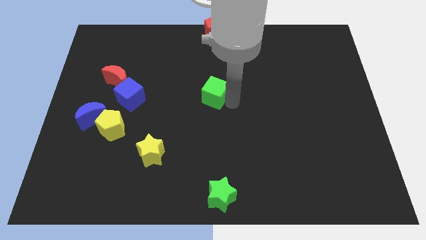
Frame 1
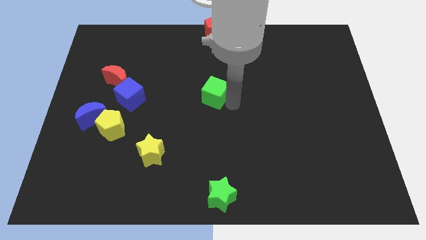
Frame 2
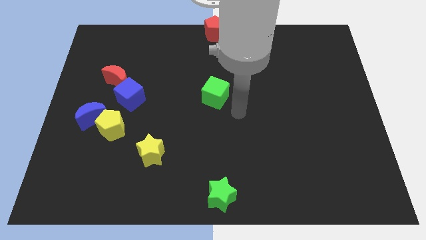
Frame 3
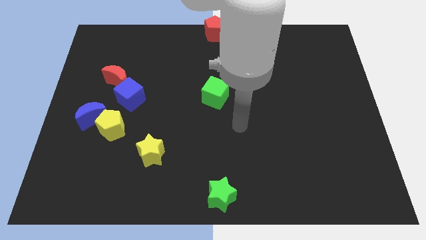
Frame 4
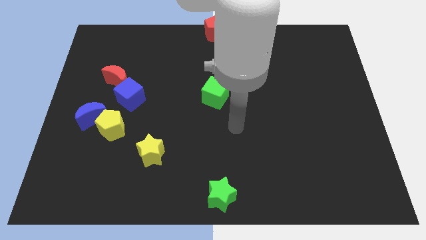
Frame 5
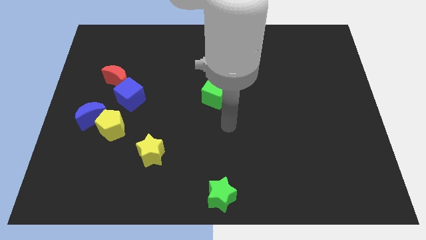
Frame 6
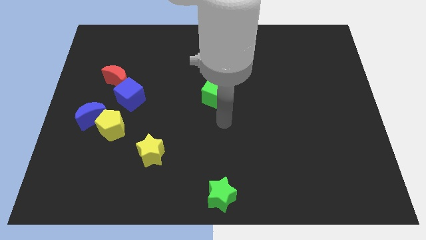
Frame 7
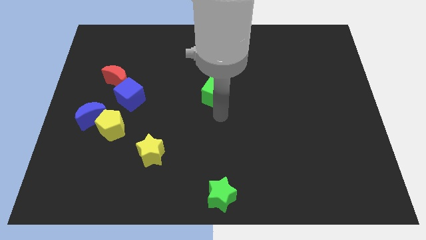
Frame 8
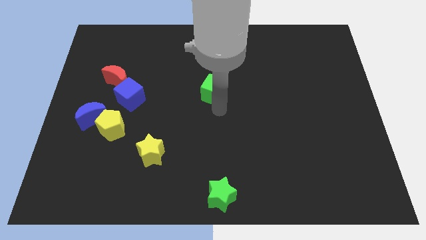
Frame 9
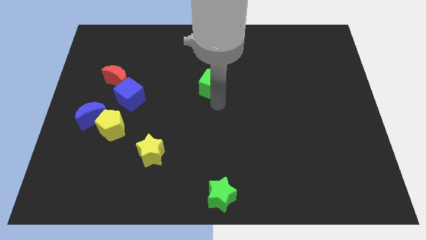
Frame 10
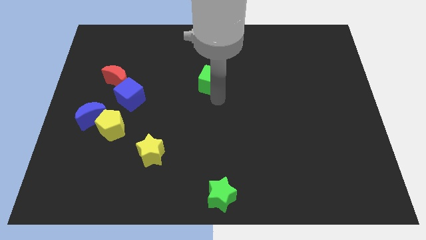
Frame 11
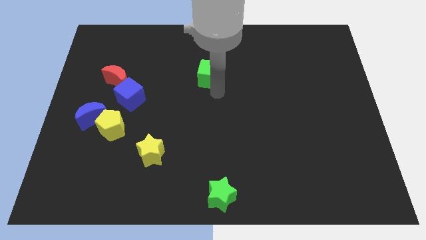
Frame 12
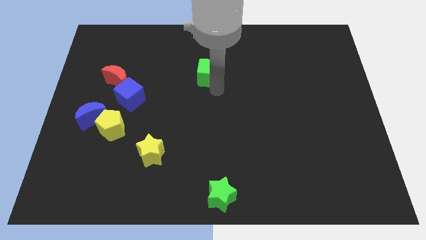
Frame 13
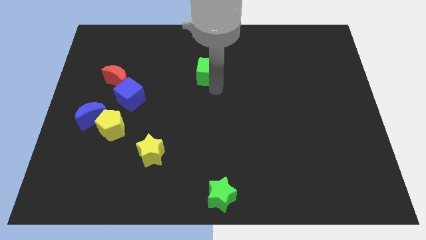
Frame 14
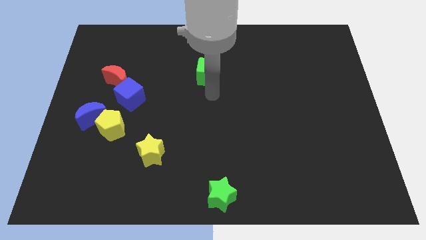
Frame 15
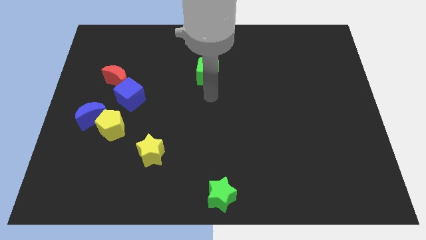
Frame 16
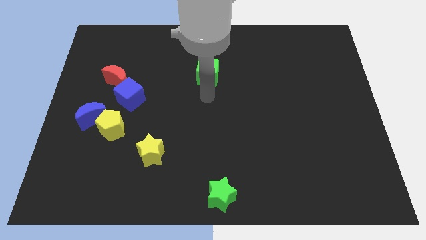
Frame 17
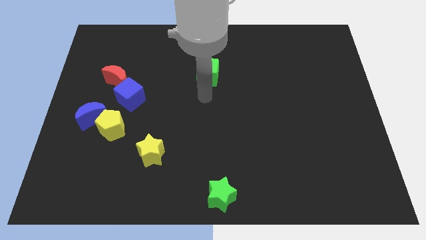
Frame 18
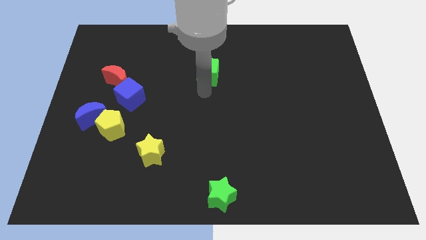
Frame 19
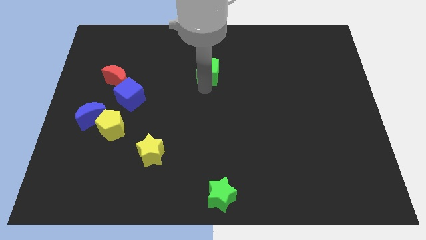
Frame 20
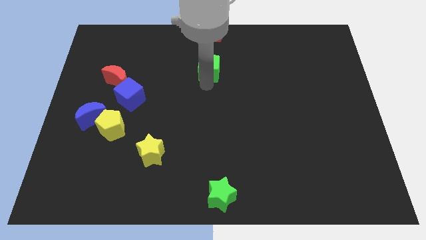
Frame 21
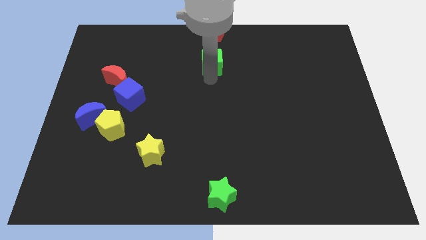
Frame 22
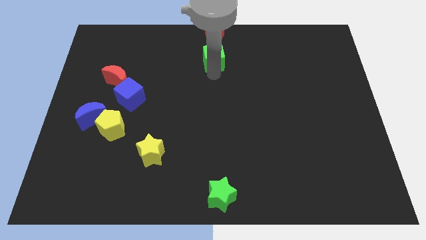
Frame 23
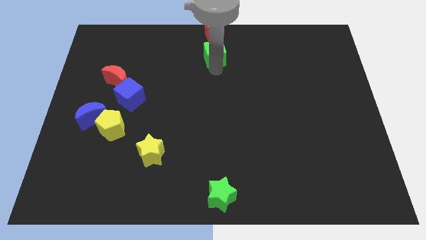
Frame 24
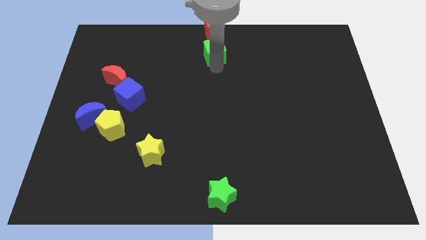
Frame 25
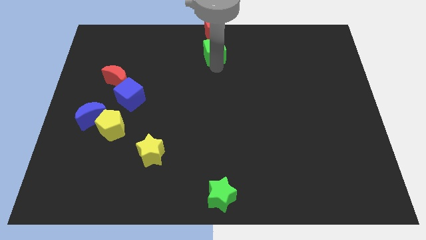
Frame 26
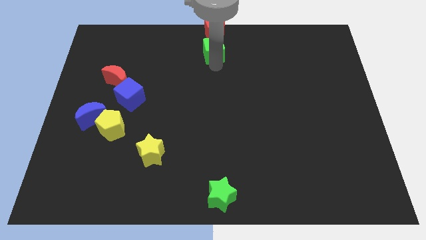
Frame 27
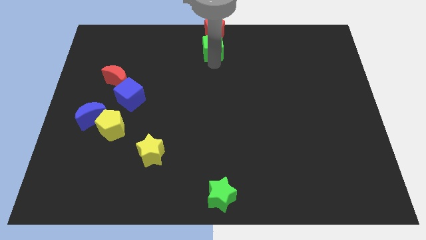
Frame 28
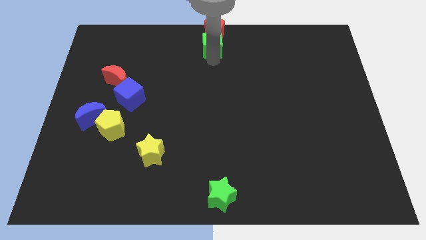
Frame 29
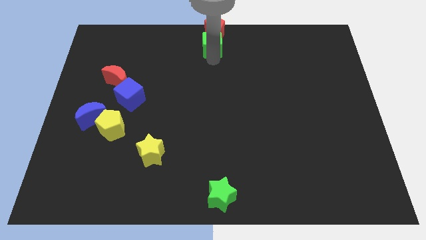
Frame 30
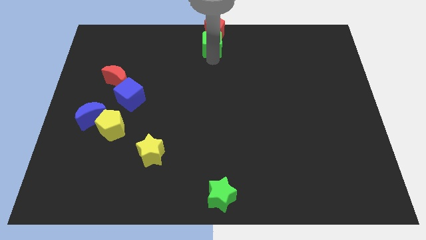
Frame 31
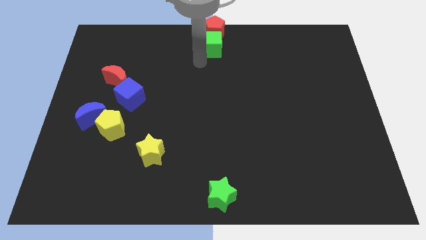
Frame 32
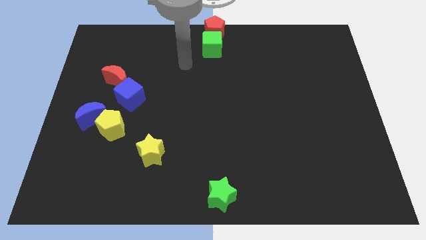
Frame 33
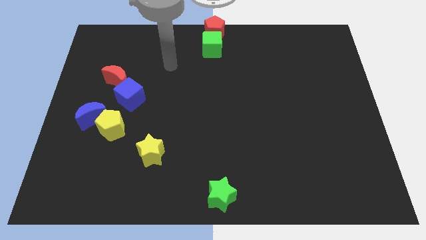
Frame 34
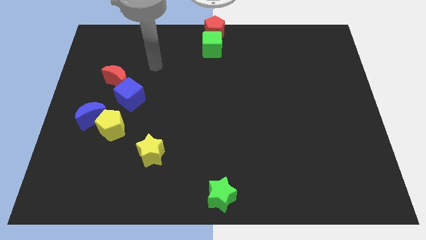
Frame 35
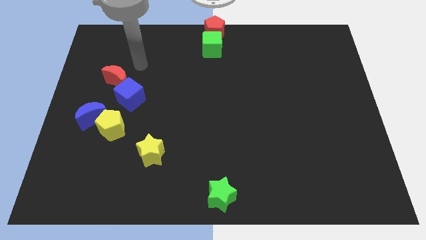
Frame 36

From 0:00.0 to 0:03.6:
place the green cube below the red pentagon

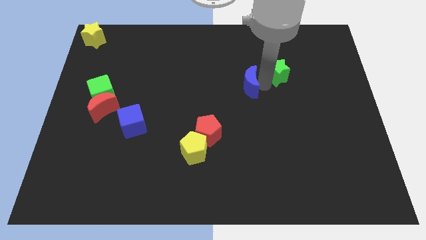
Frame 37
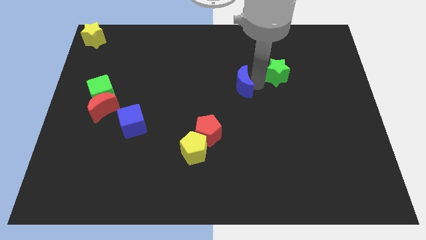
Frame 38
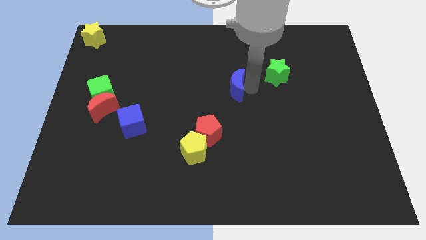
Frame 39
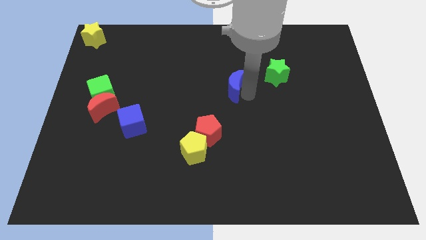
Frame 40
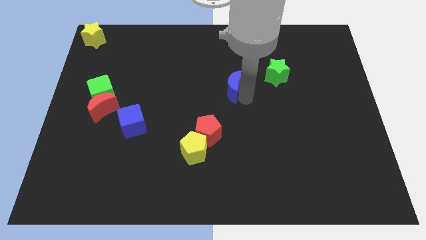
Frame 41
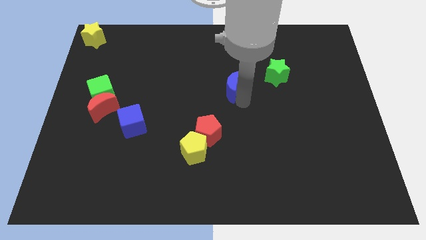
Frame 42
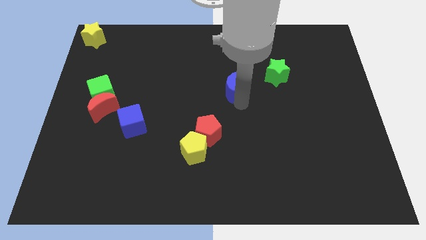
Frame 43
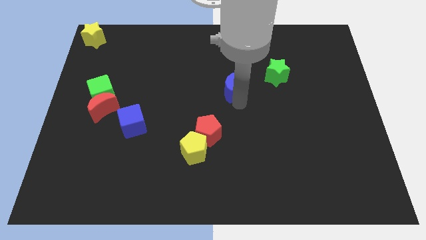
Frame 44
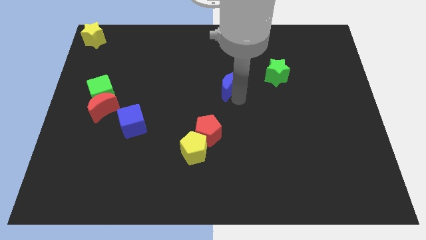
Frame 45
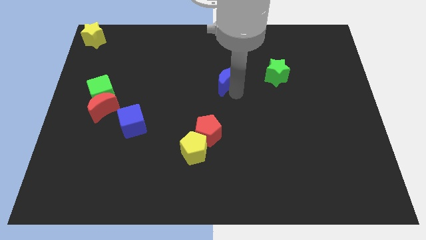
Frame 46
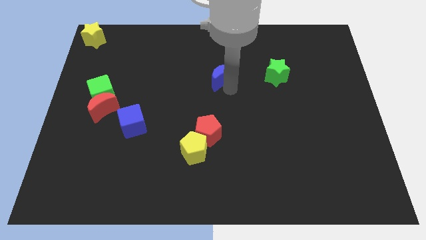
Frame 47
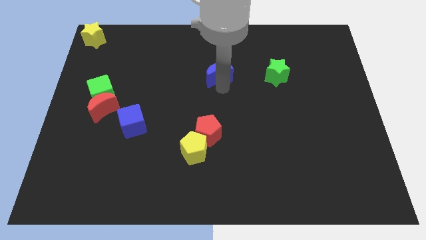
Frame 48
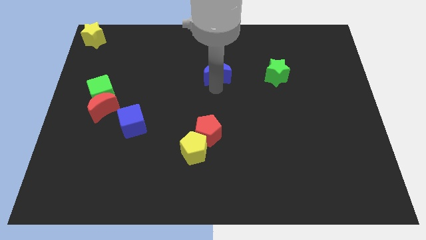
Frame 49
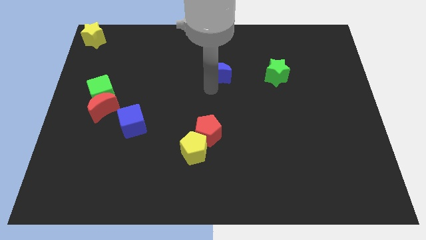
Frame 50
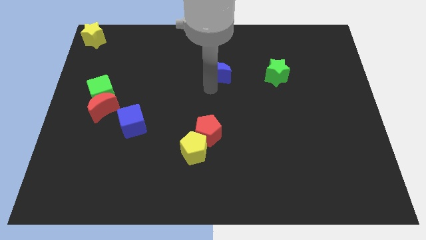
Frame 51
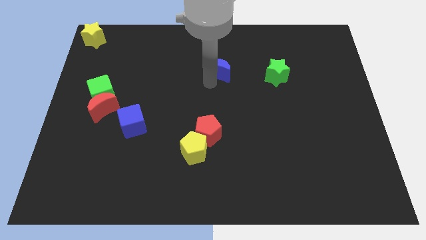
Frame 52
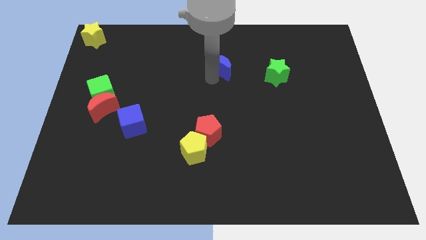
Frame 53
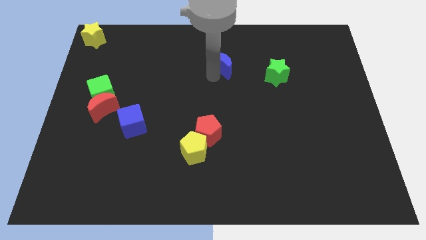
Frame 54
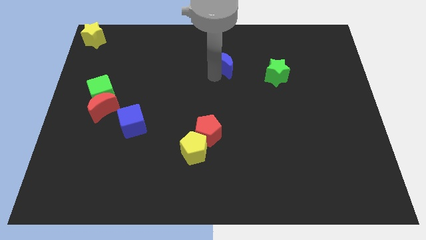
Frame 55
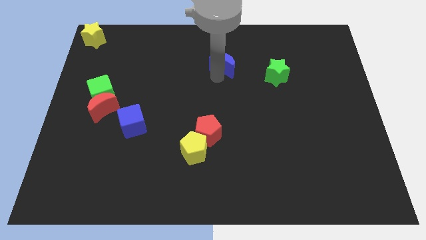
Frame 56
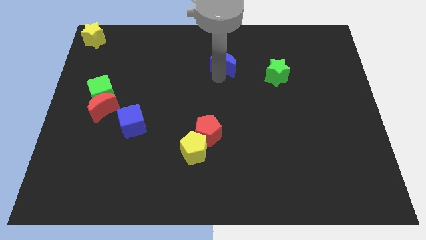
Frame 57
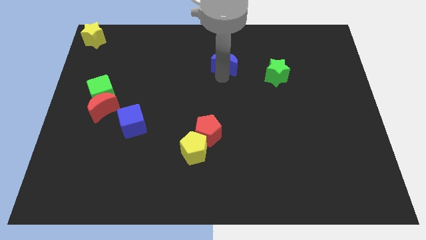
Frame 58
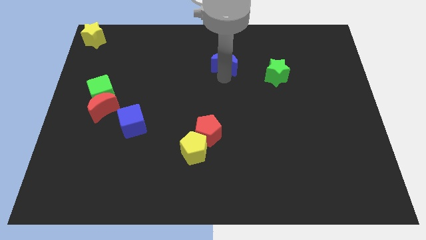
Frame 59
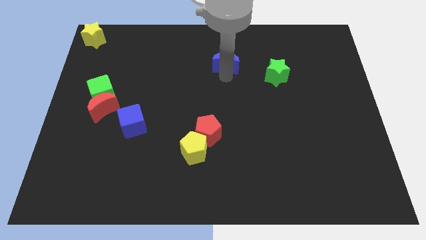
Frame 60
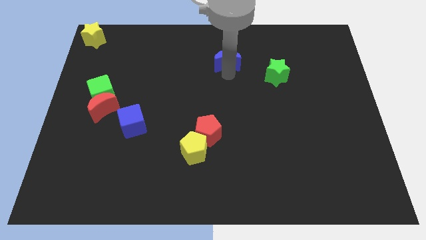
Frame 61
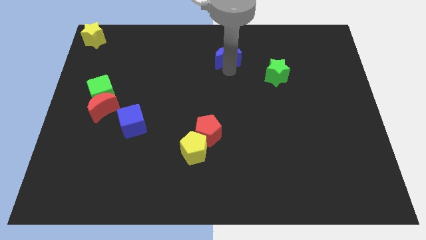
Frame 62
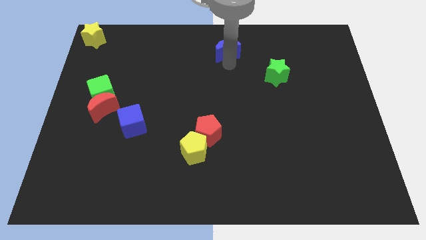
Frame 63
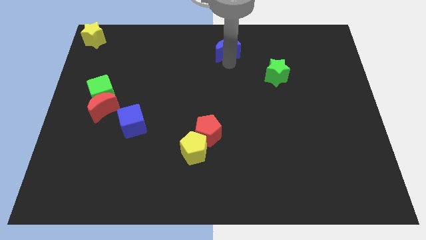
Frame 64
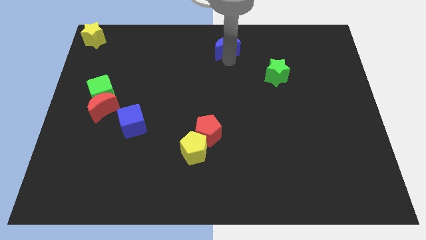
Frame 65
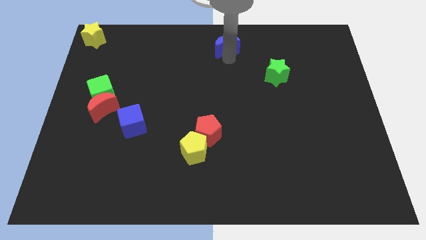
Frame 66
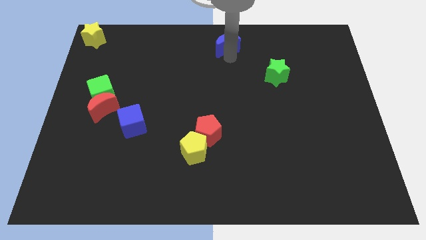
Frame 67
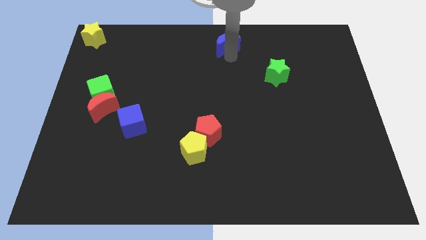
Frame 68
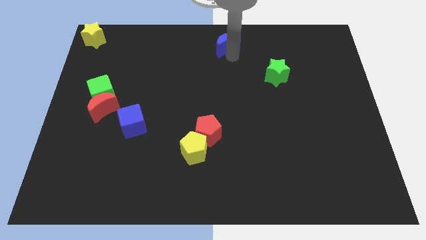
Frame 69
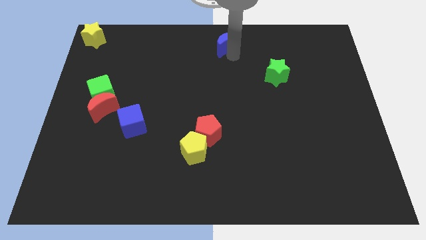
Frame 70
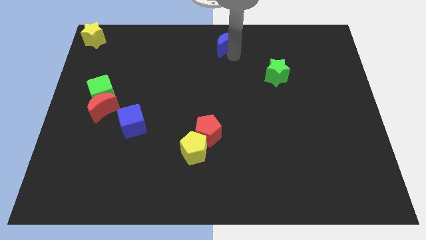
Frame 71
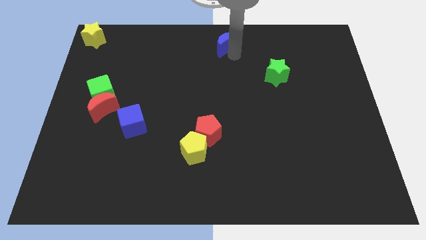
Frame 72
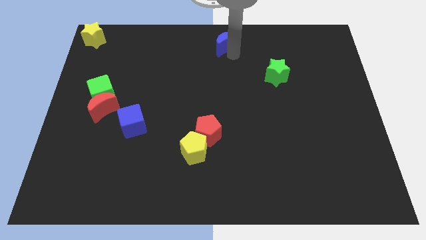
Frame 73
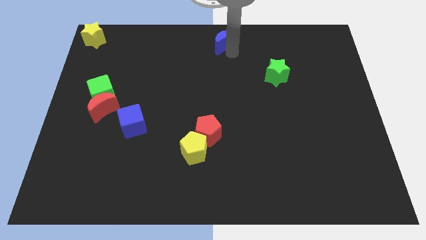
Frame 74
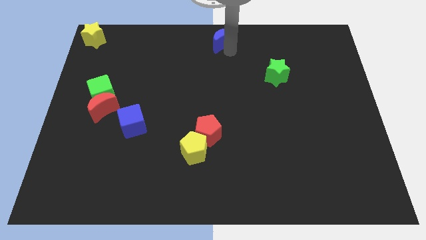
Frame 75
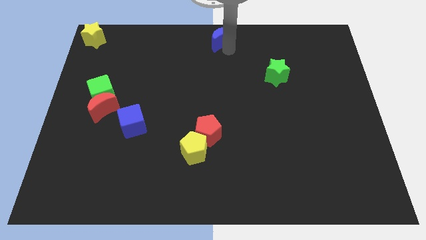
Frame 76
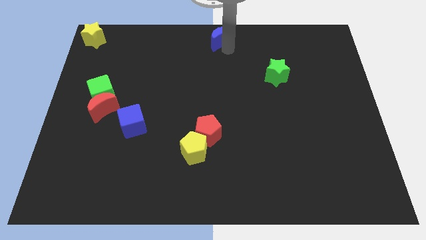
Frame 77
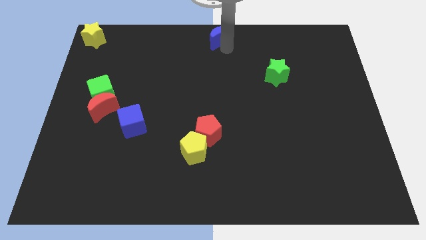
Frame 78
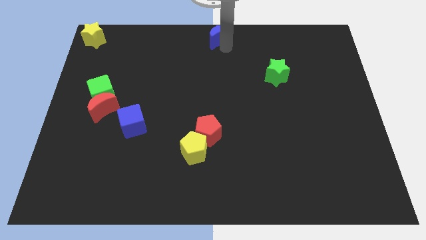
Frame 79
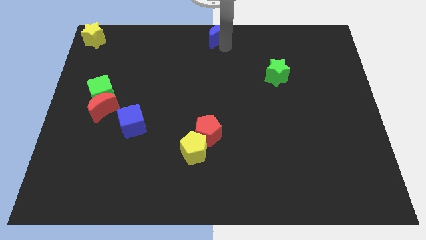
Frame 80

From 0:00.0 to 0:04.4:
push the blue crescent towards the top center of the board

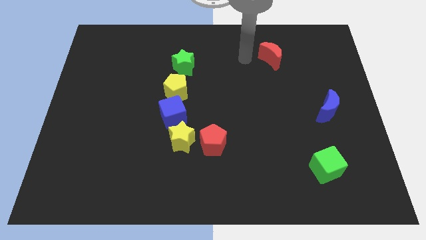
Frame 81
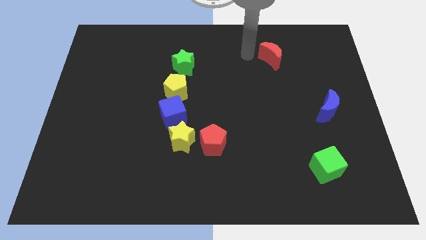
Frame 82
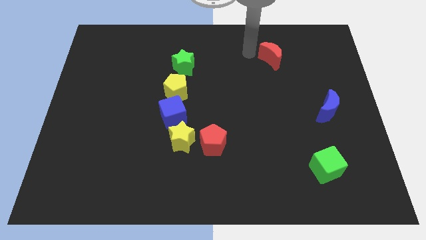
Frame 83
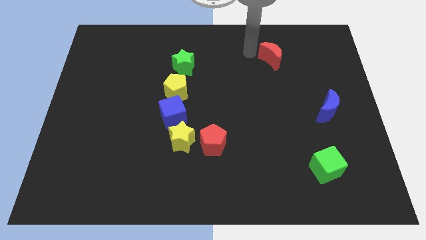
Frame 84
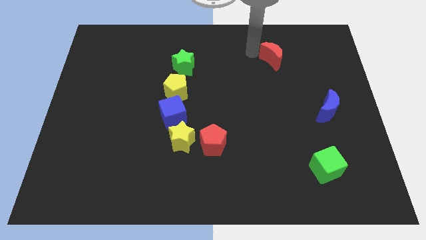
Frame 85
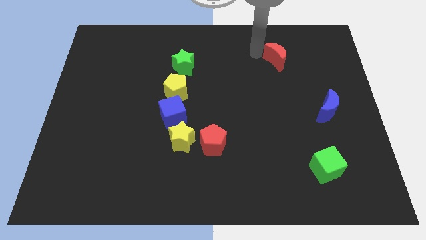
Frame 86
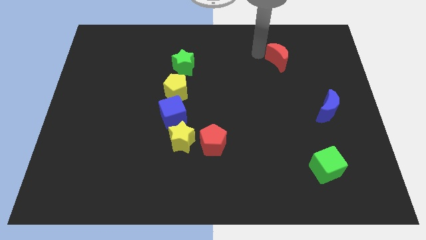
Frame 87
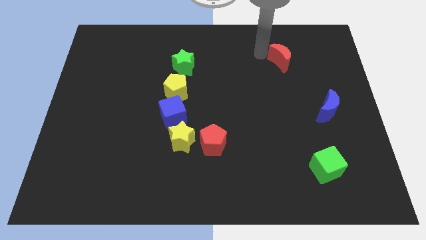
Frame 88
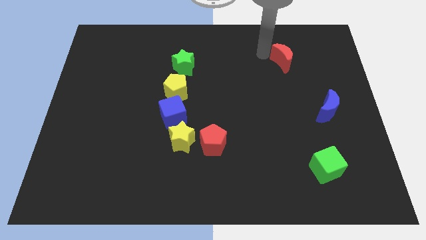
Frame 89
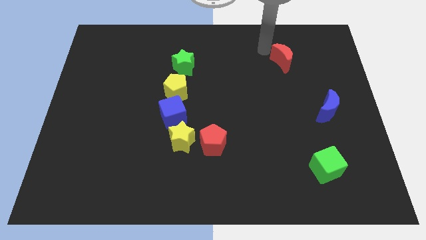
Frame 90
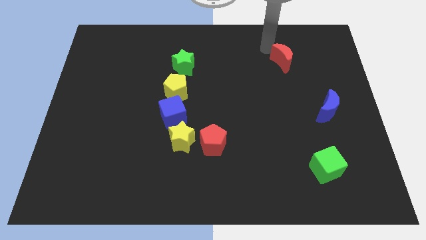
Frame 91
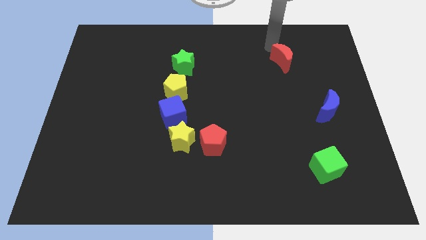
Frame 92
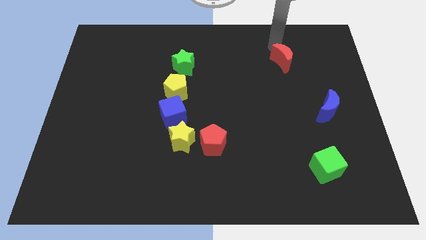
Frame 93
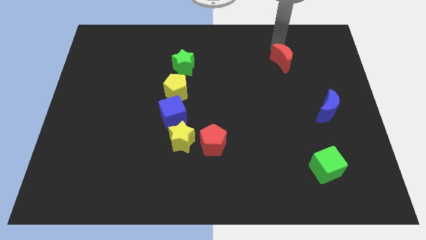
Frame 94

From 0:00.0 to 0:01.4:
push red crescent to the right side
